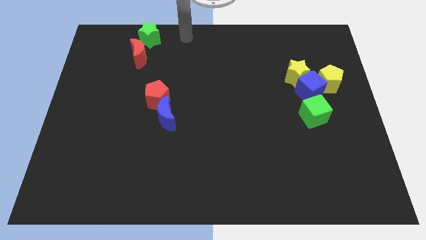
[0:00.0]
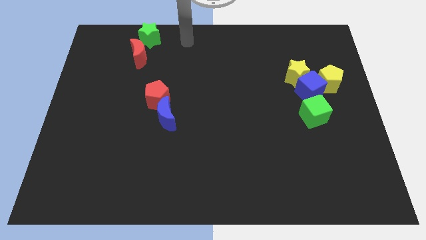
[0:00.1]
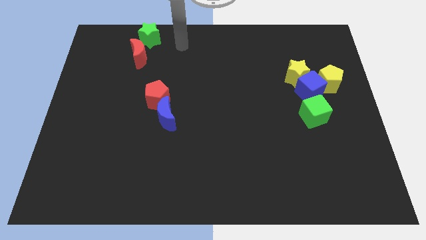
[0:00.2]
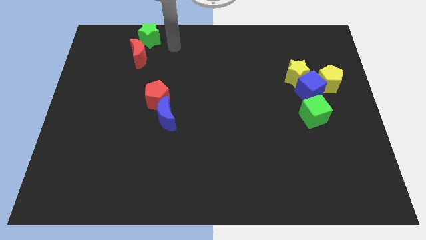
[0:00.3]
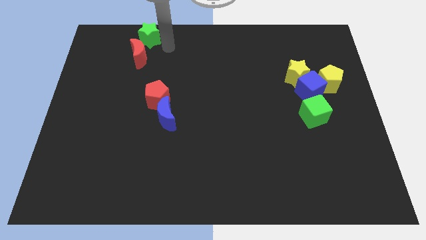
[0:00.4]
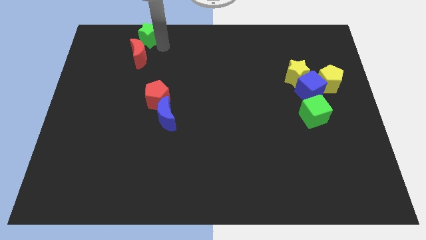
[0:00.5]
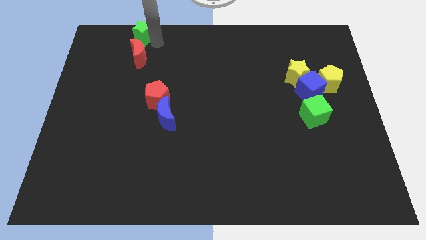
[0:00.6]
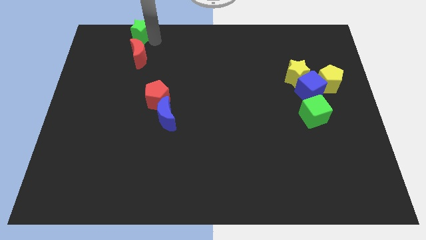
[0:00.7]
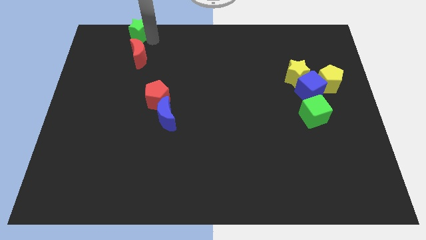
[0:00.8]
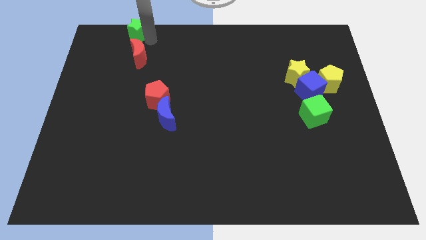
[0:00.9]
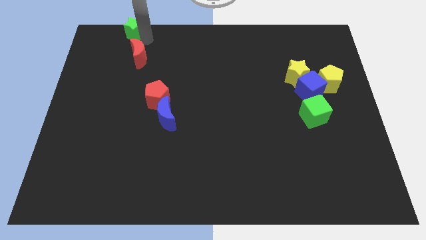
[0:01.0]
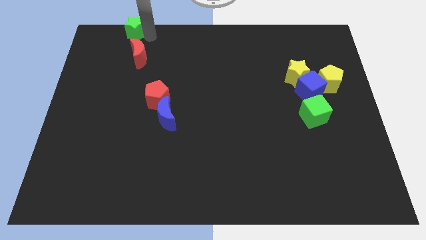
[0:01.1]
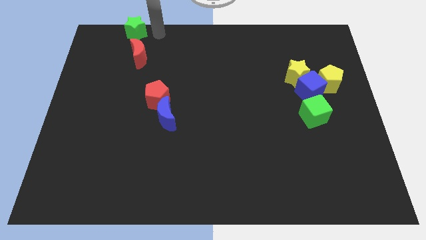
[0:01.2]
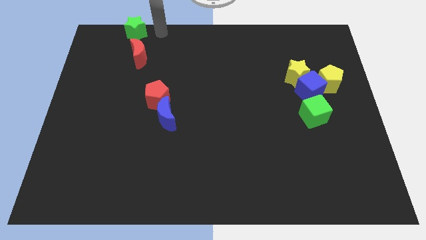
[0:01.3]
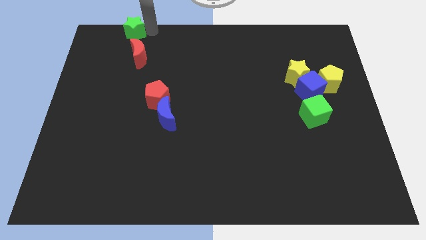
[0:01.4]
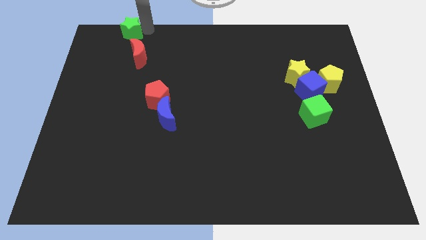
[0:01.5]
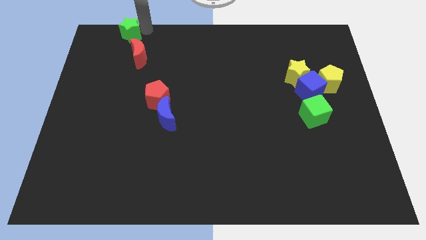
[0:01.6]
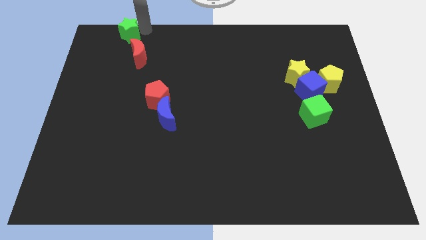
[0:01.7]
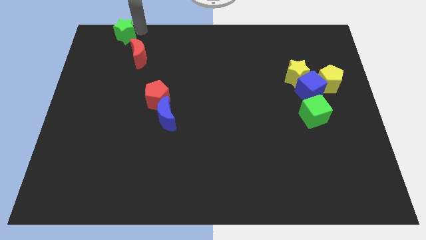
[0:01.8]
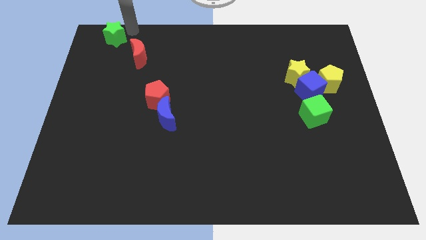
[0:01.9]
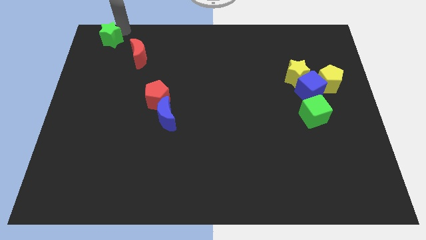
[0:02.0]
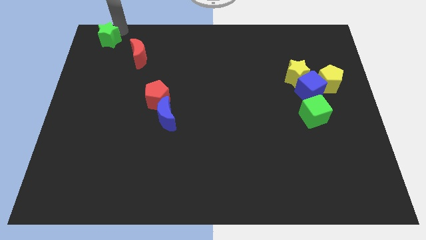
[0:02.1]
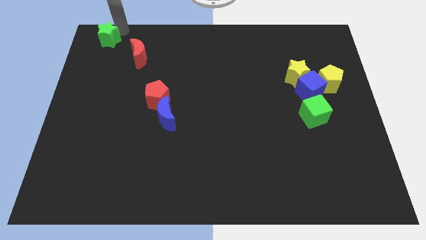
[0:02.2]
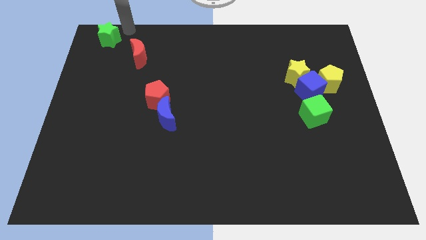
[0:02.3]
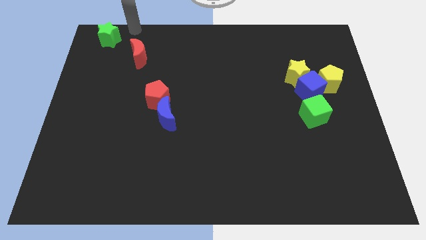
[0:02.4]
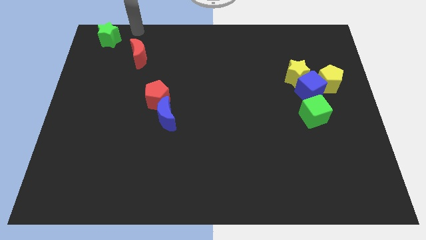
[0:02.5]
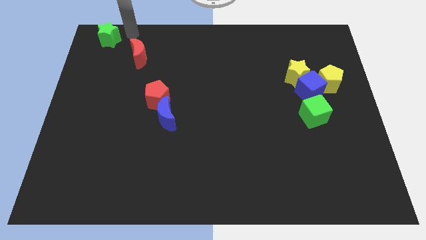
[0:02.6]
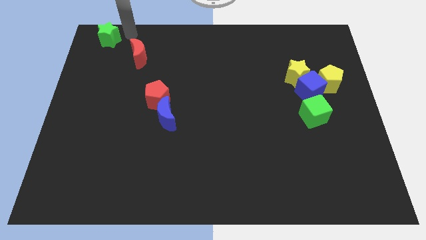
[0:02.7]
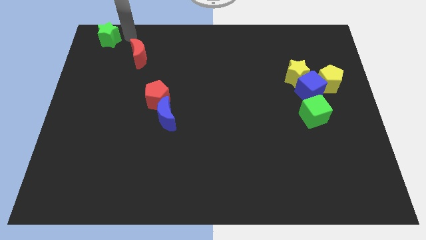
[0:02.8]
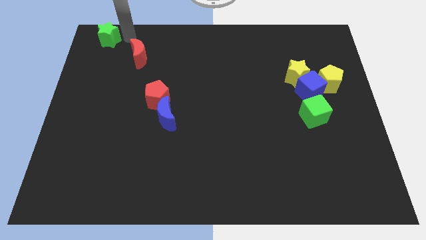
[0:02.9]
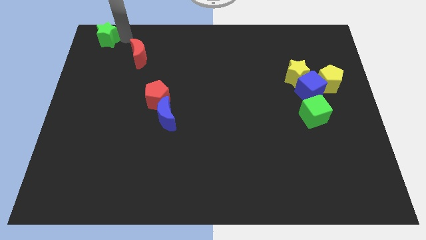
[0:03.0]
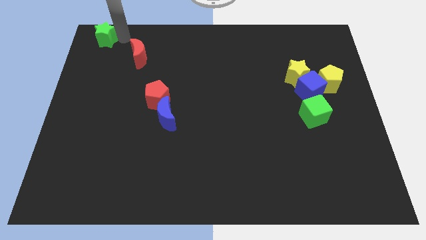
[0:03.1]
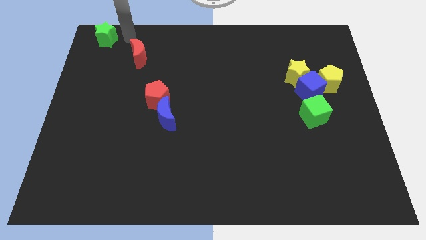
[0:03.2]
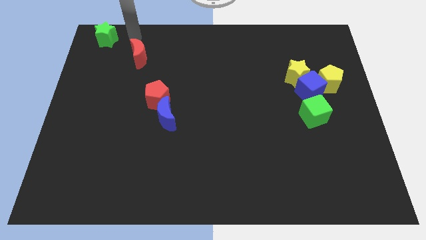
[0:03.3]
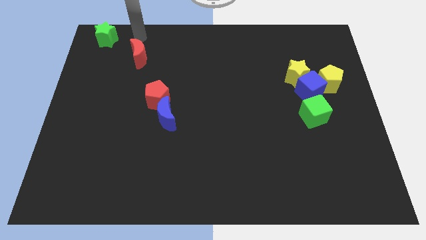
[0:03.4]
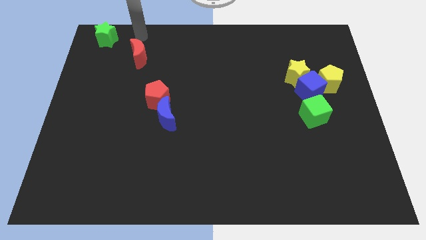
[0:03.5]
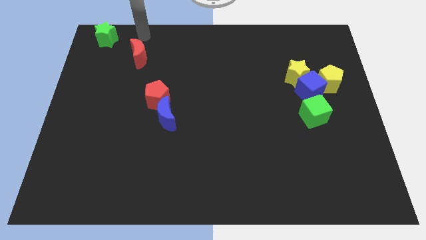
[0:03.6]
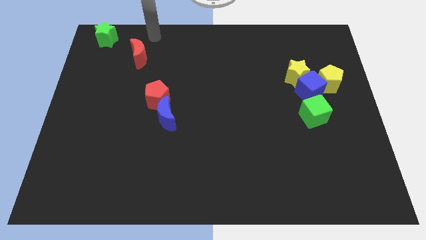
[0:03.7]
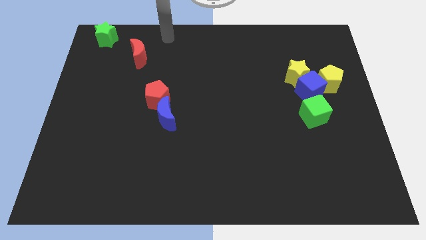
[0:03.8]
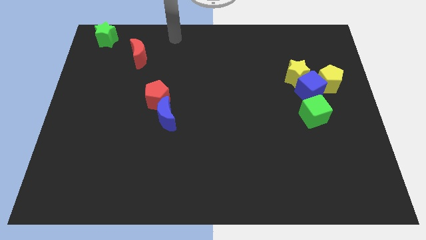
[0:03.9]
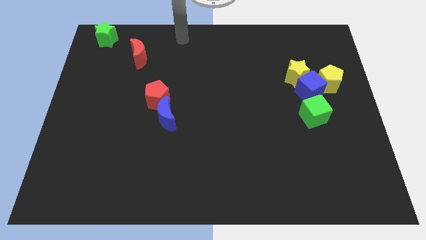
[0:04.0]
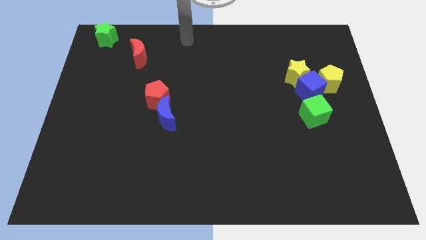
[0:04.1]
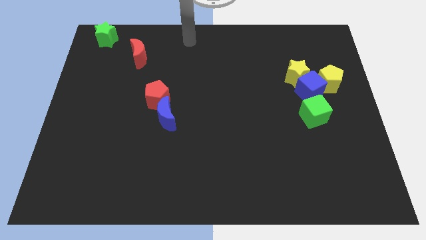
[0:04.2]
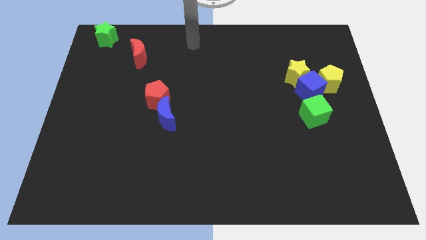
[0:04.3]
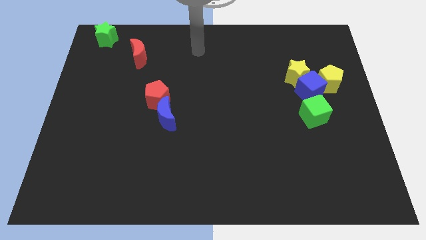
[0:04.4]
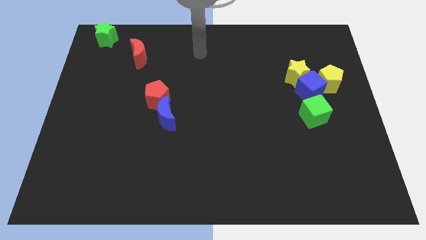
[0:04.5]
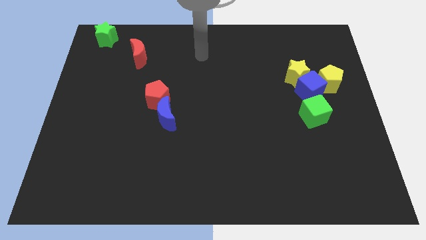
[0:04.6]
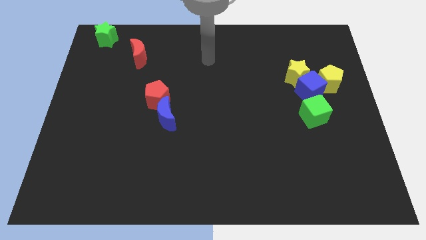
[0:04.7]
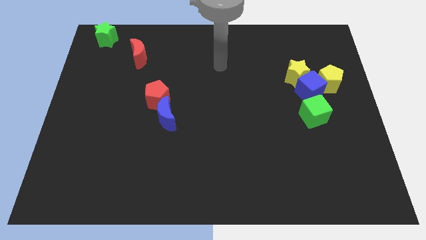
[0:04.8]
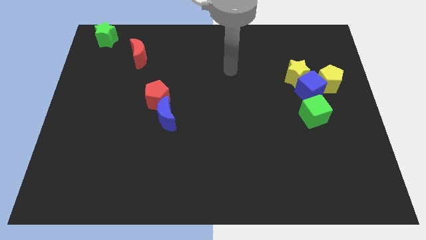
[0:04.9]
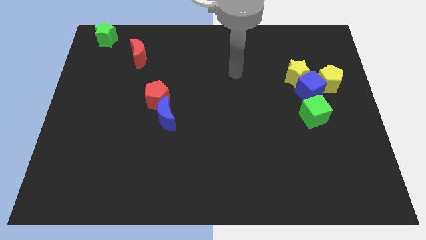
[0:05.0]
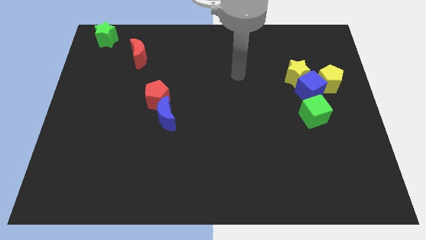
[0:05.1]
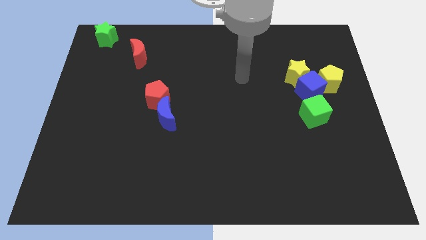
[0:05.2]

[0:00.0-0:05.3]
separate the green star away from the red crescent

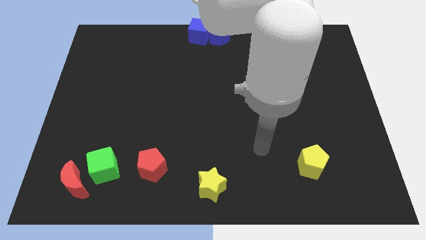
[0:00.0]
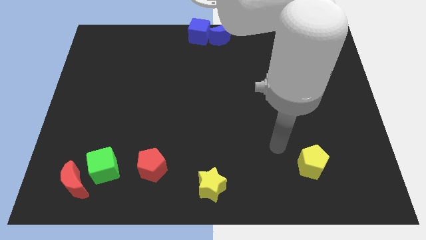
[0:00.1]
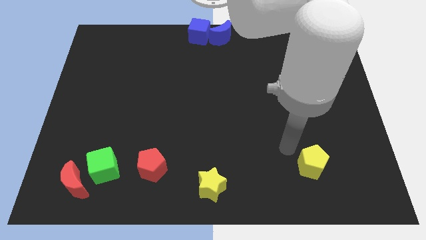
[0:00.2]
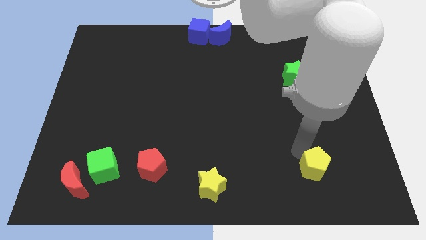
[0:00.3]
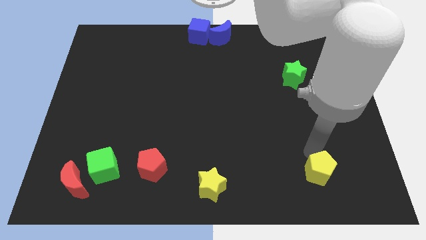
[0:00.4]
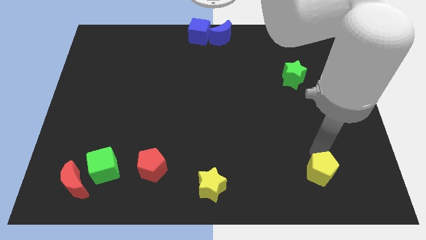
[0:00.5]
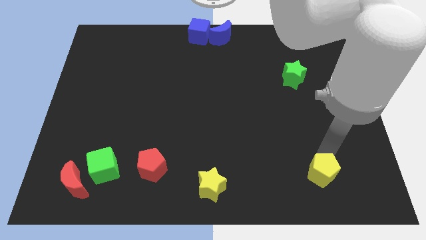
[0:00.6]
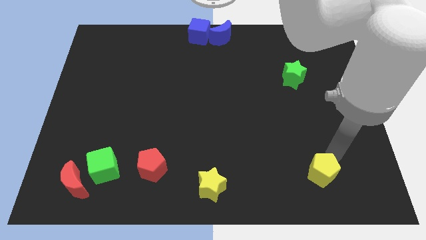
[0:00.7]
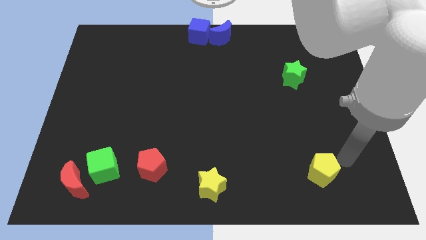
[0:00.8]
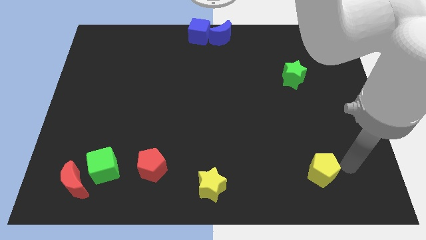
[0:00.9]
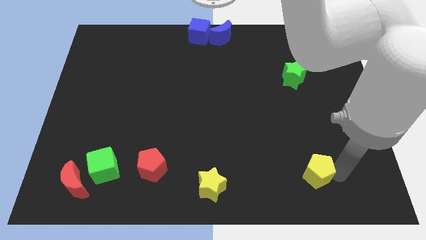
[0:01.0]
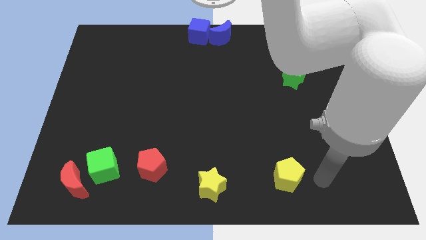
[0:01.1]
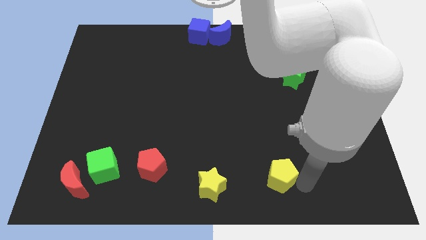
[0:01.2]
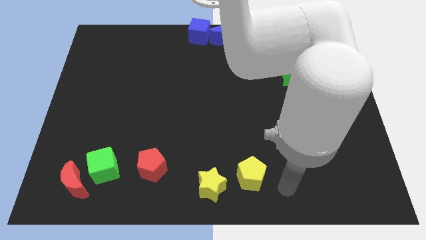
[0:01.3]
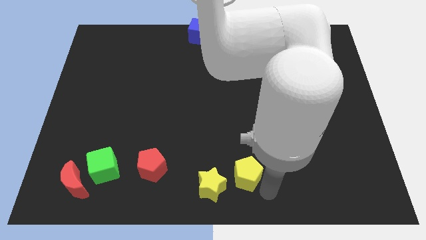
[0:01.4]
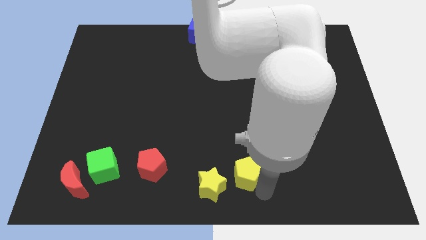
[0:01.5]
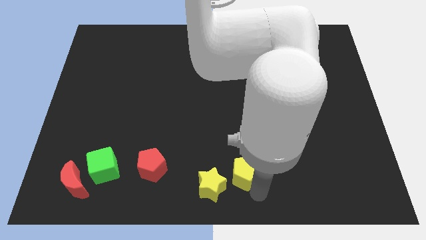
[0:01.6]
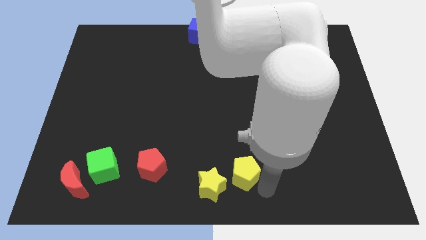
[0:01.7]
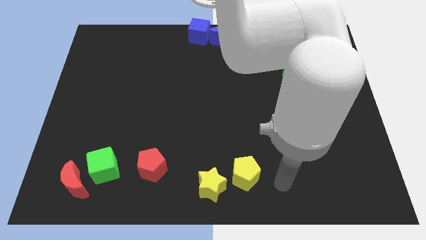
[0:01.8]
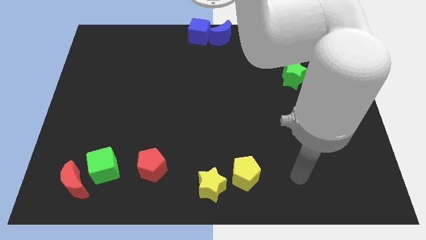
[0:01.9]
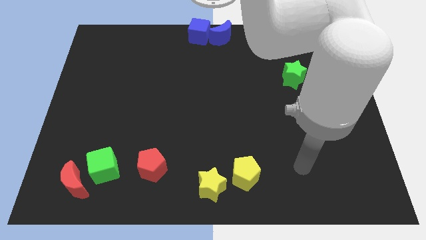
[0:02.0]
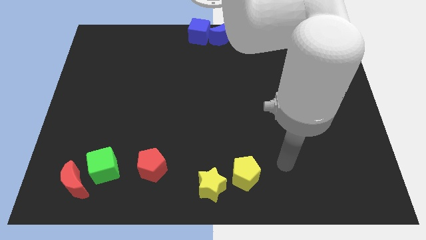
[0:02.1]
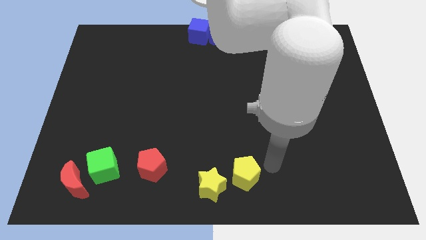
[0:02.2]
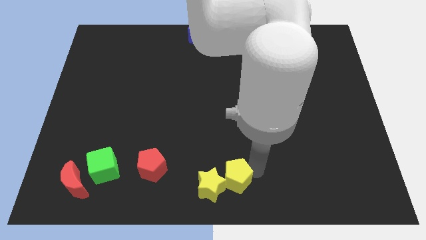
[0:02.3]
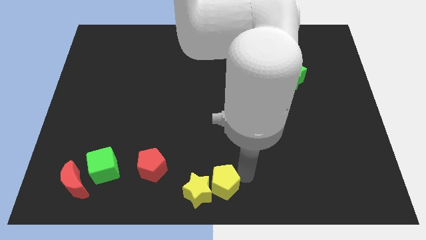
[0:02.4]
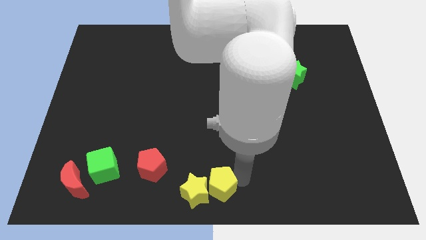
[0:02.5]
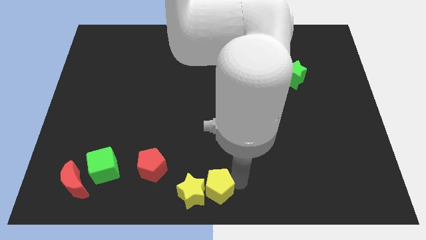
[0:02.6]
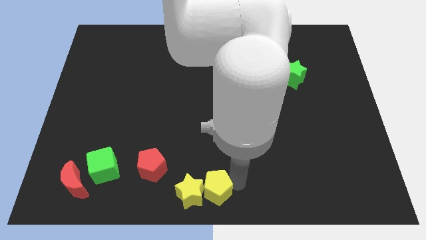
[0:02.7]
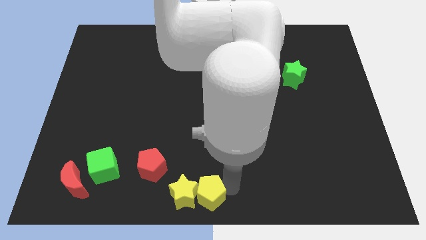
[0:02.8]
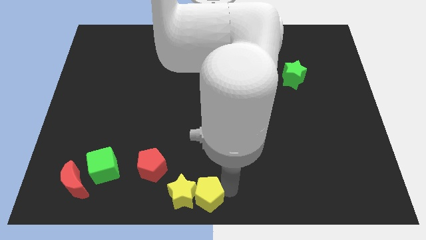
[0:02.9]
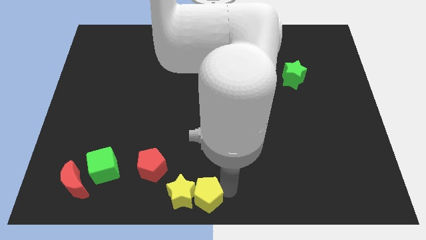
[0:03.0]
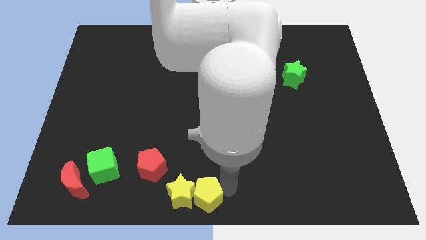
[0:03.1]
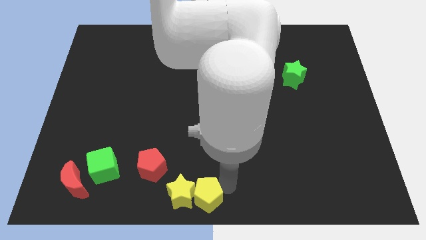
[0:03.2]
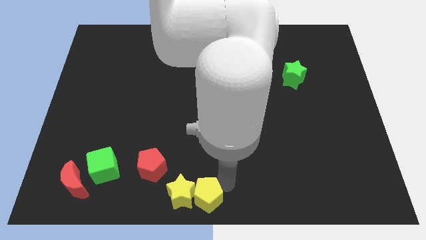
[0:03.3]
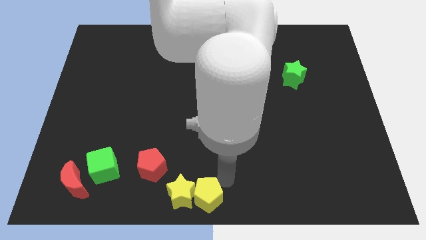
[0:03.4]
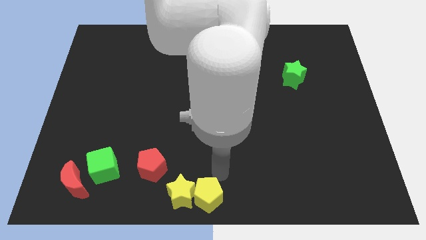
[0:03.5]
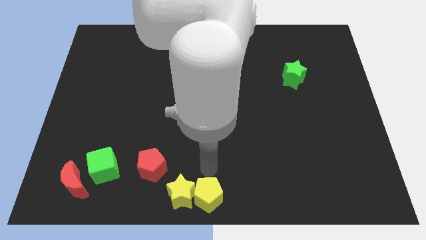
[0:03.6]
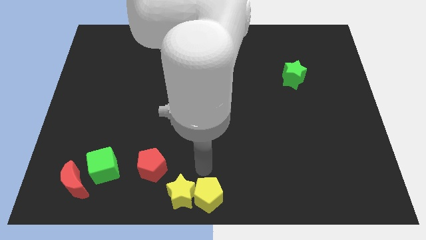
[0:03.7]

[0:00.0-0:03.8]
push the yellow pentagon into the yellow star
